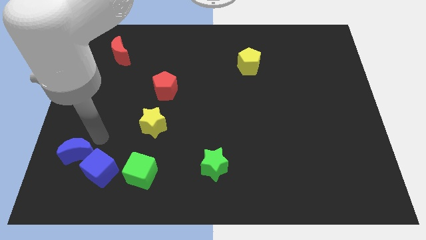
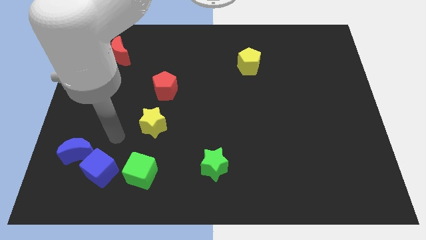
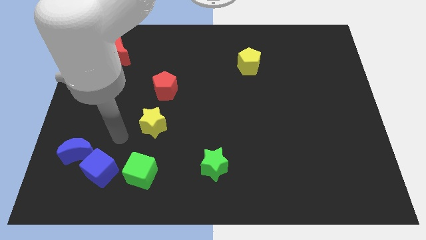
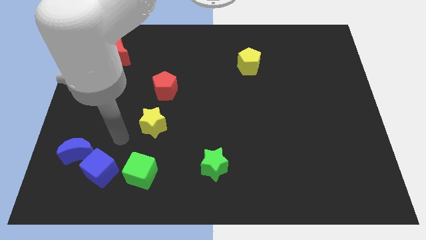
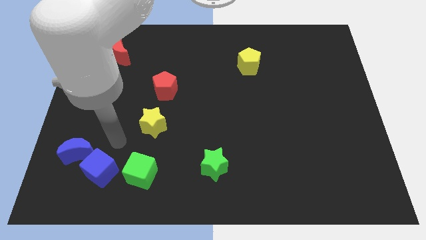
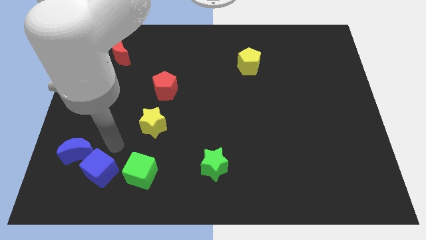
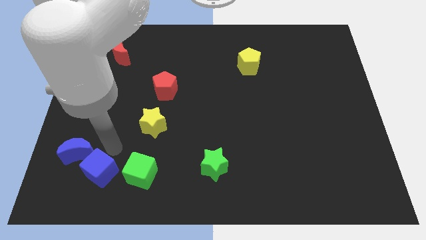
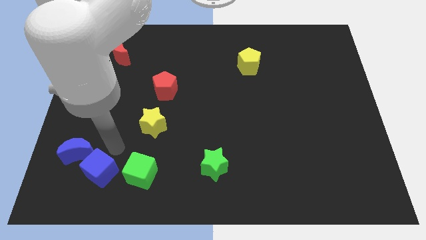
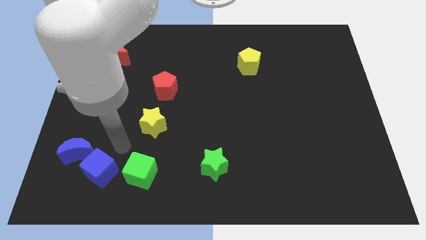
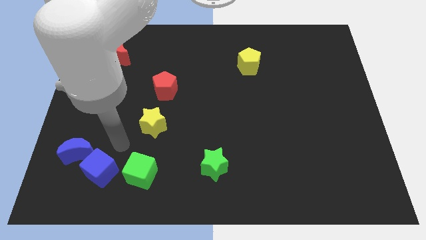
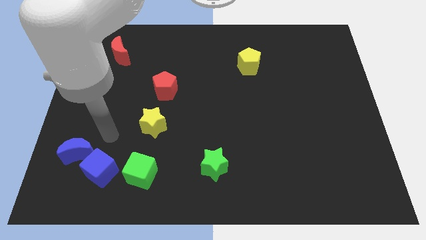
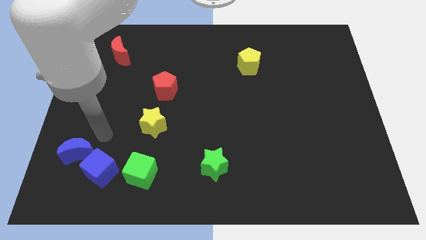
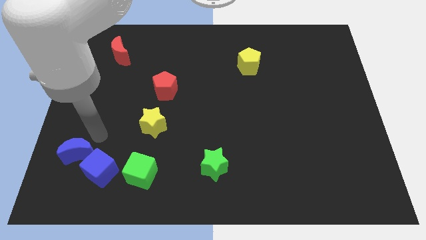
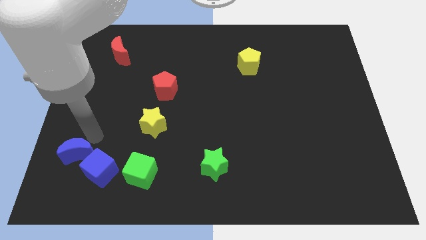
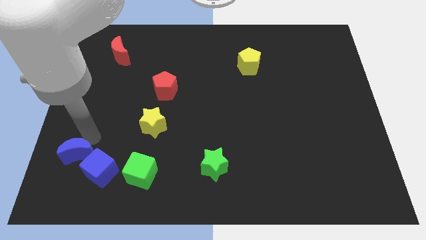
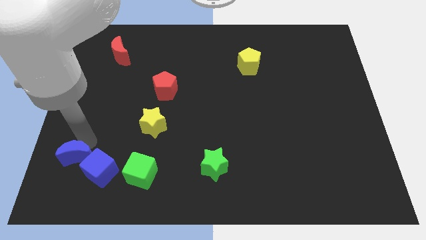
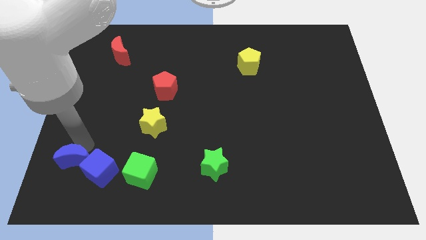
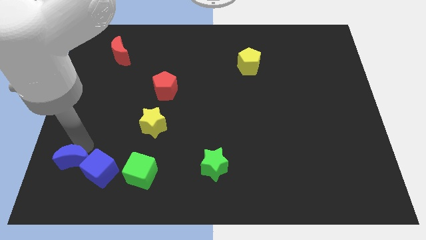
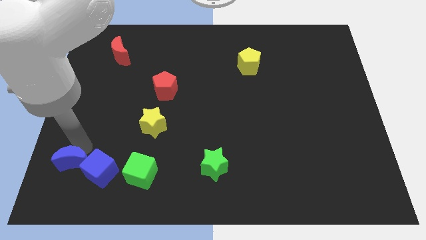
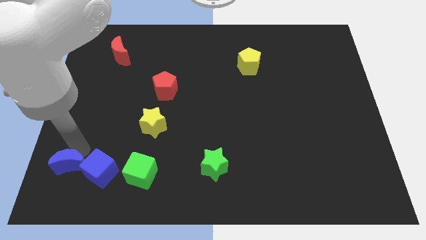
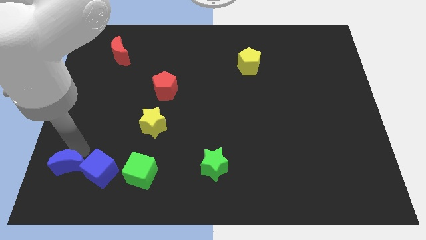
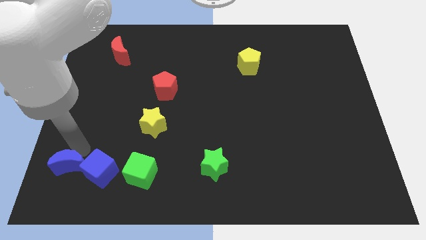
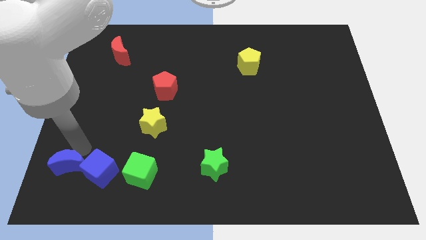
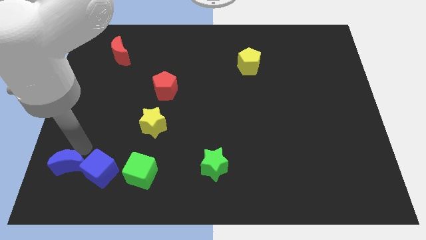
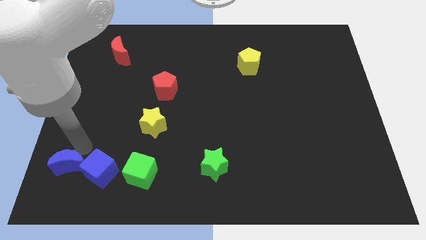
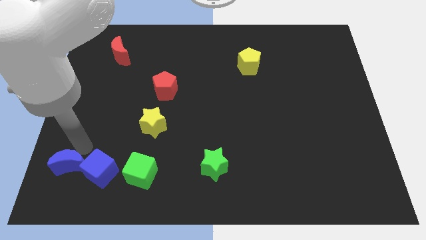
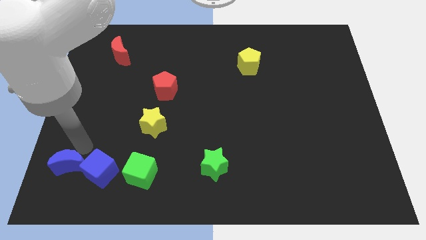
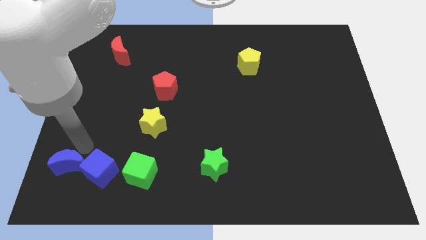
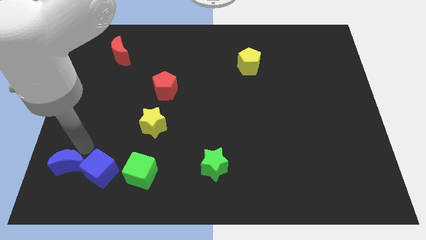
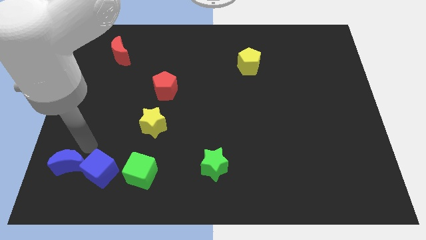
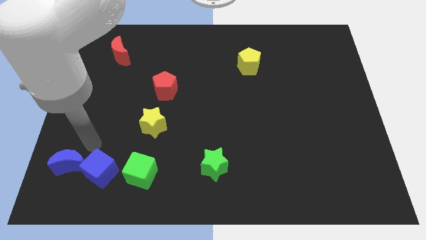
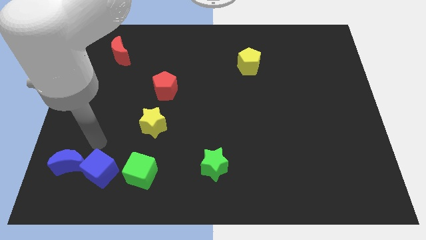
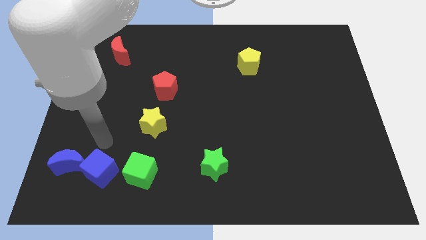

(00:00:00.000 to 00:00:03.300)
adjust the blue crescent to the left of the blue cube

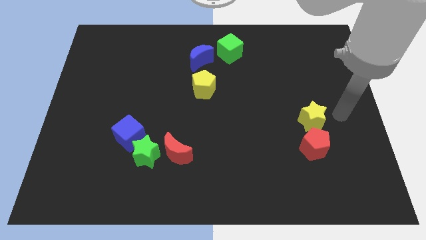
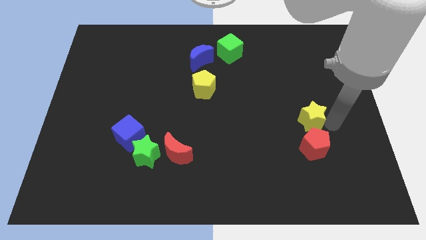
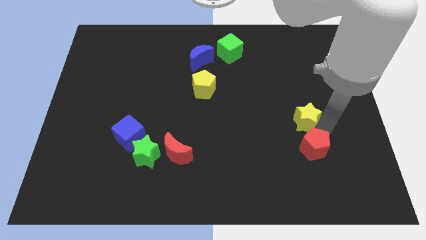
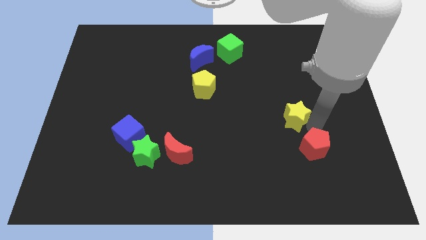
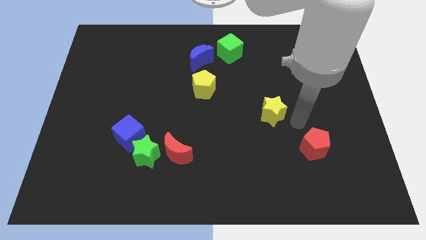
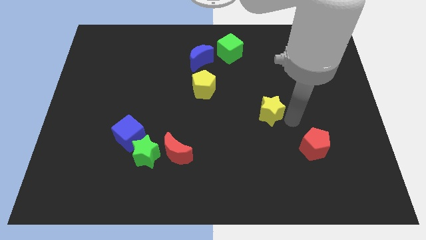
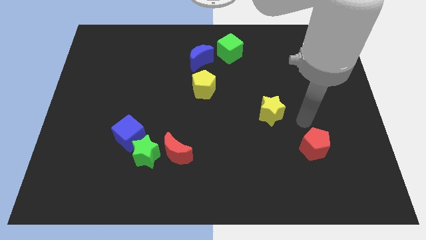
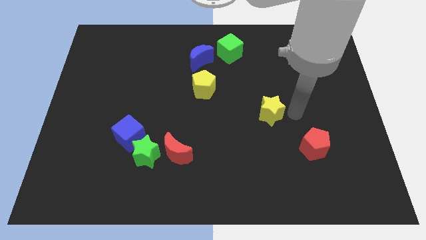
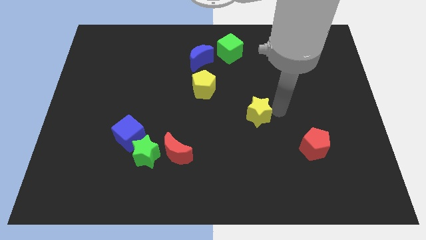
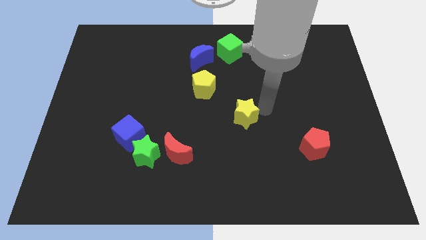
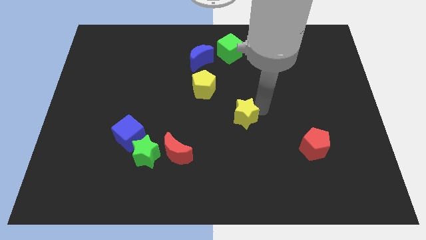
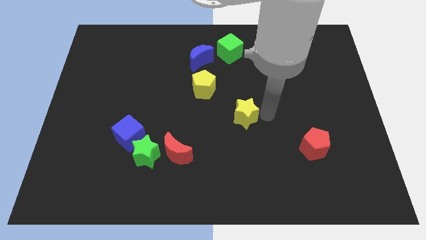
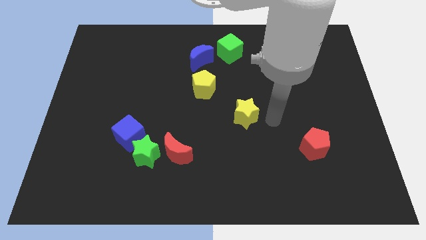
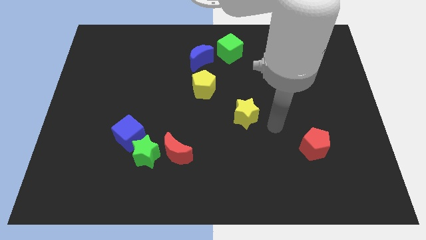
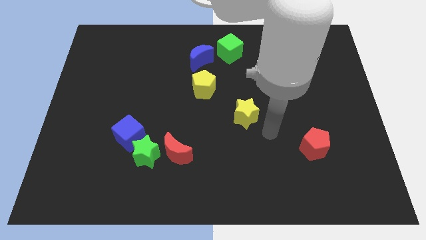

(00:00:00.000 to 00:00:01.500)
put the yellow star in between the yellow pentagon and red pentagon

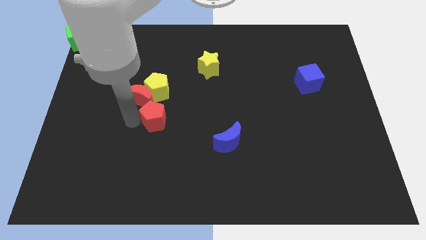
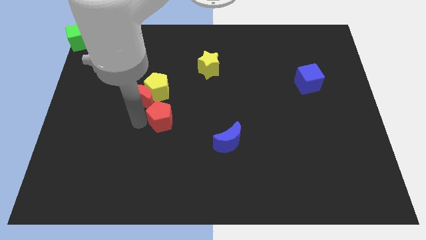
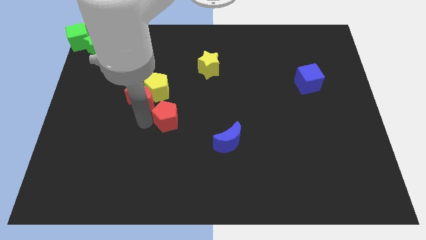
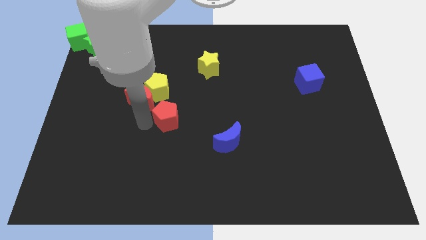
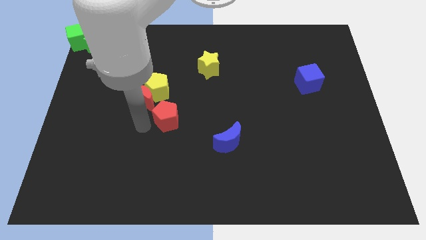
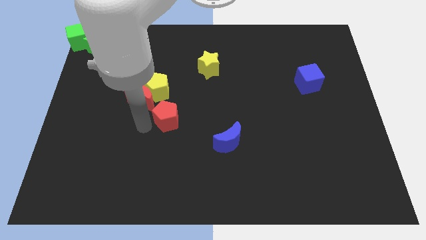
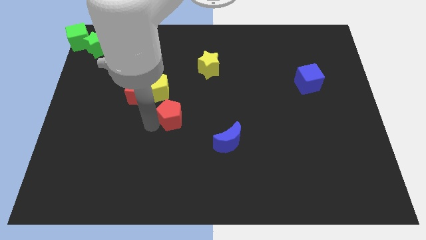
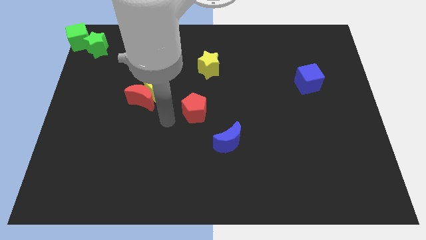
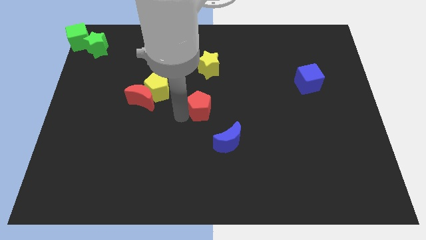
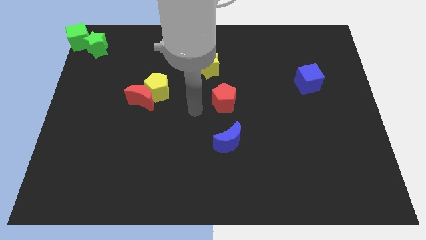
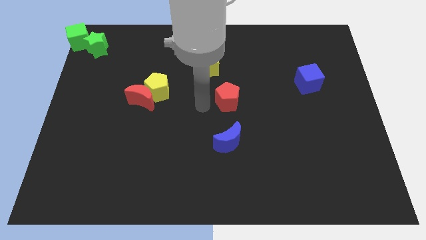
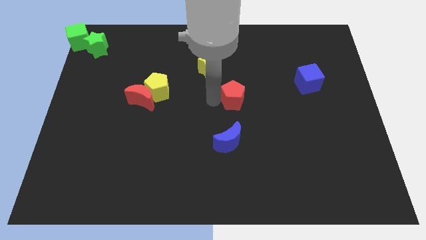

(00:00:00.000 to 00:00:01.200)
move the red pentagon to the center of the board

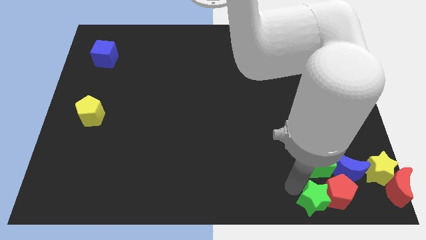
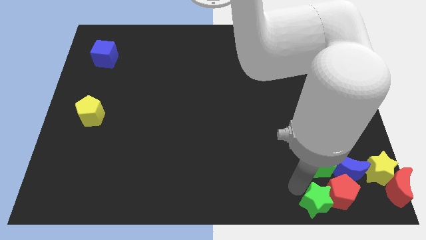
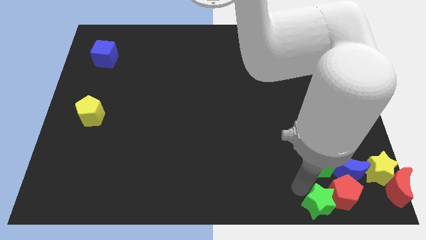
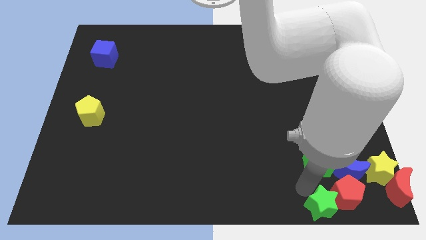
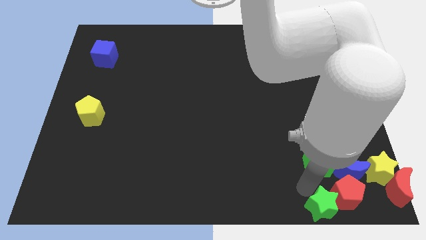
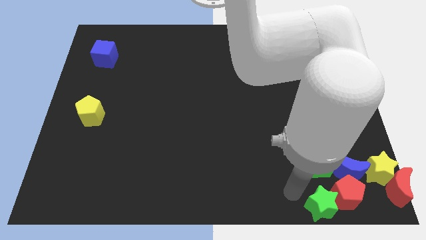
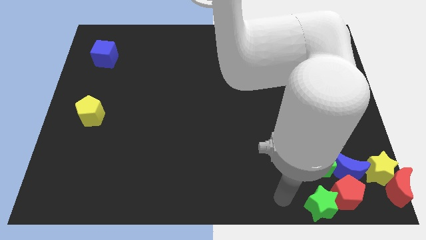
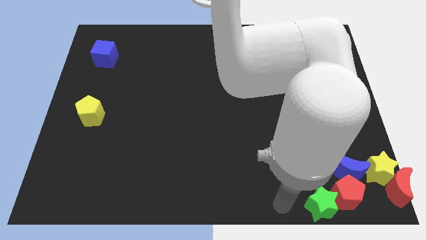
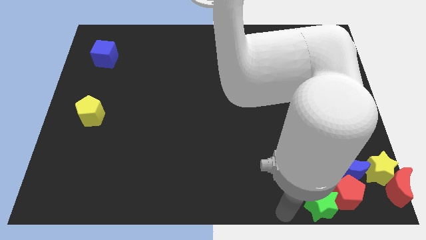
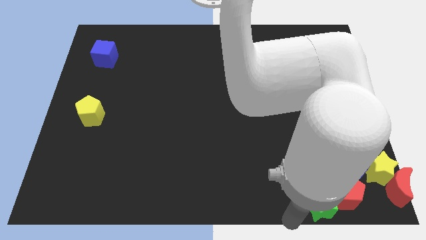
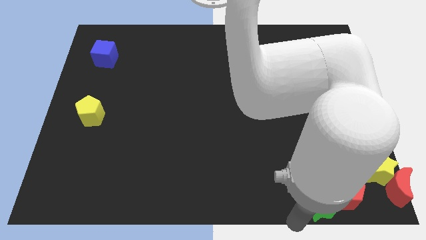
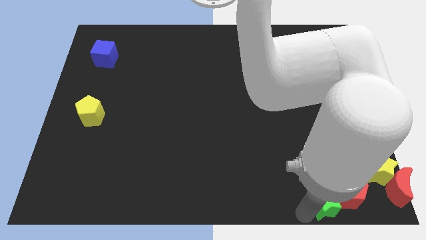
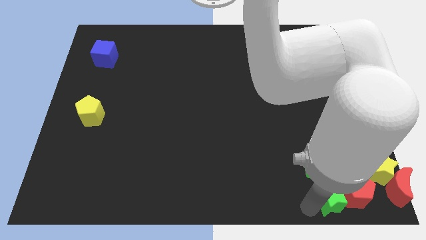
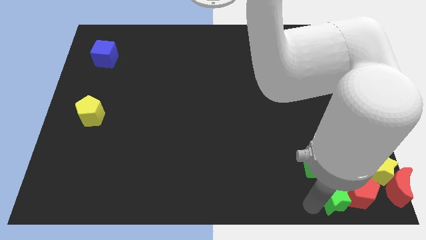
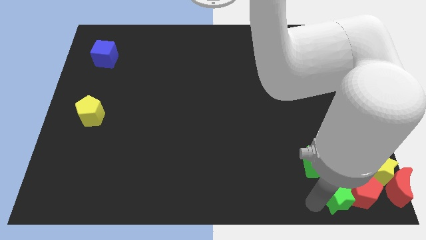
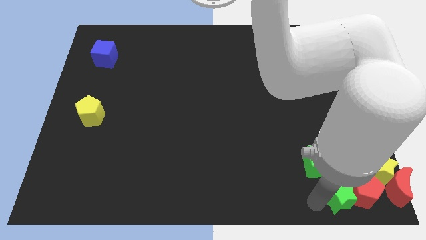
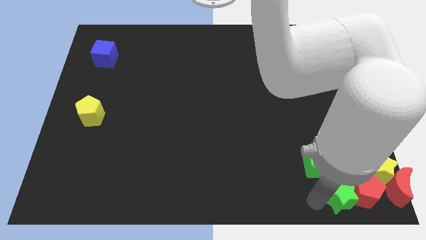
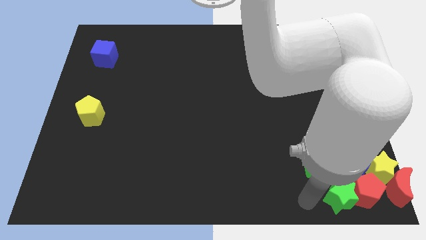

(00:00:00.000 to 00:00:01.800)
push the green star and red pentagon below the group of blocks to the right side

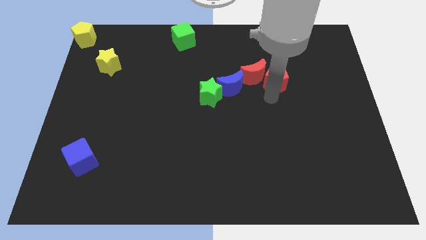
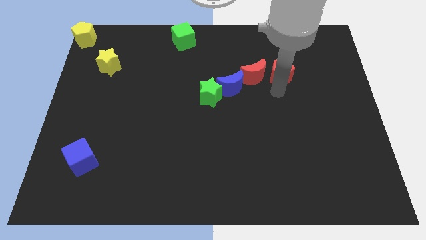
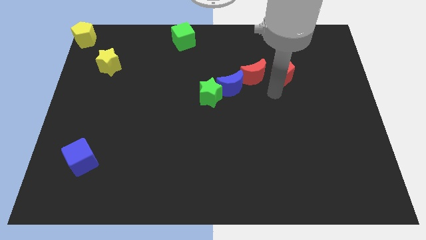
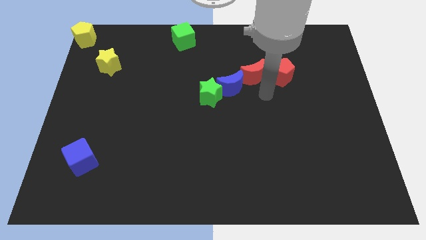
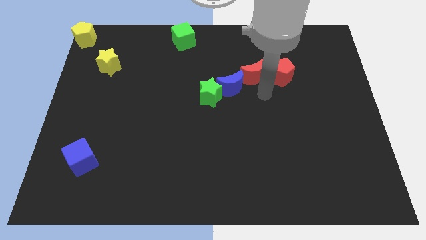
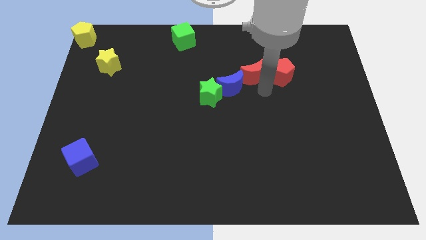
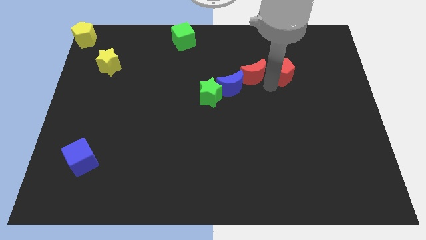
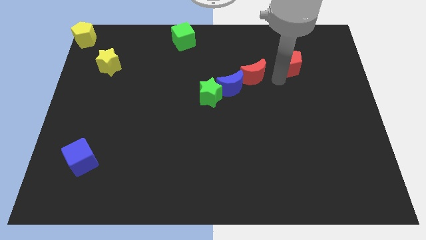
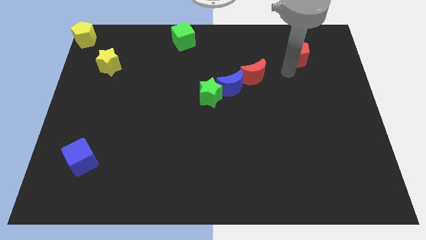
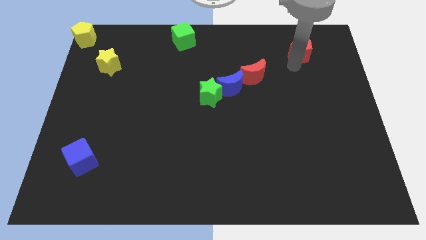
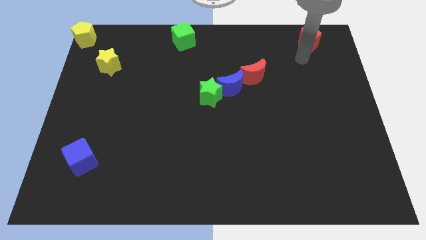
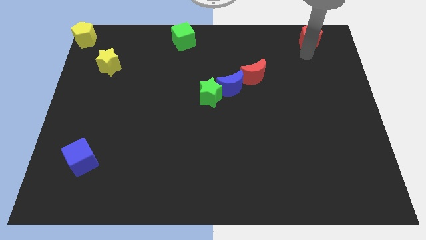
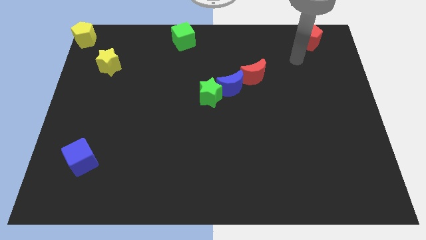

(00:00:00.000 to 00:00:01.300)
move the red pentagon to the diagonal right of the red moon
